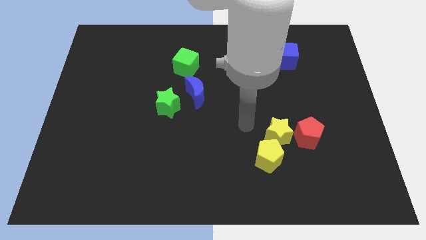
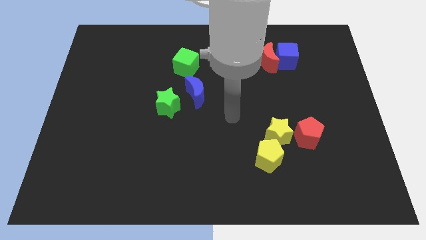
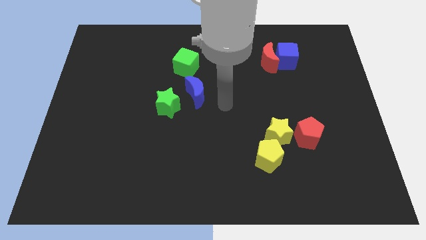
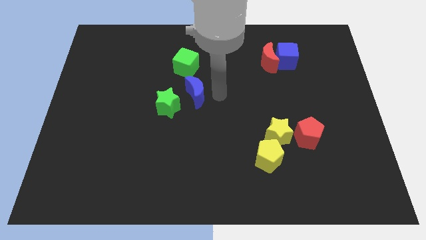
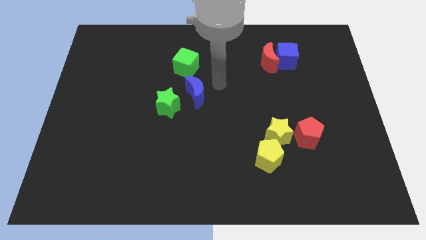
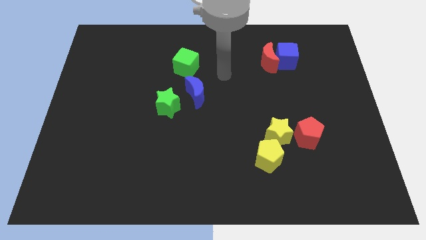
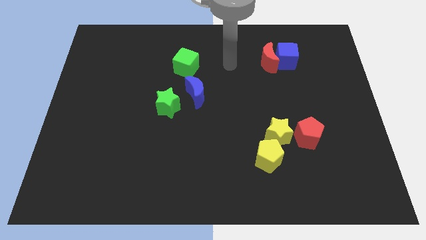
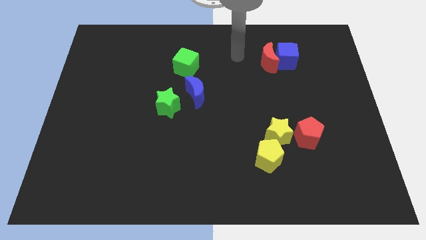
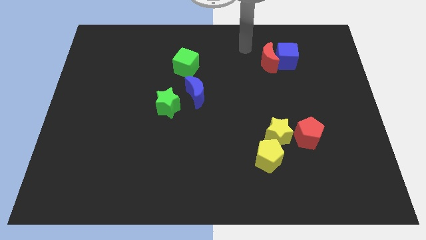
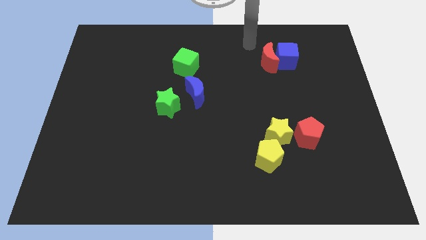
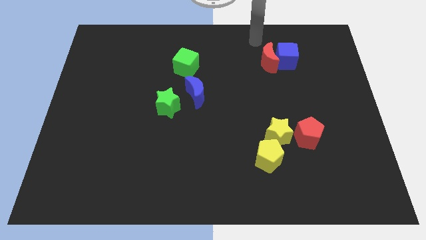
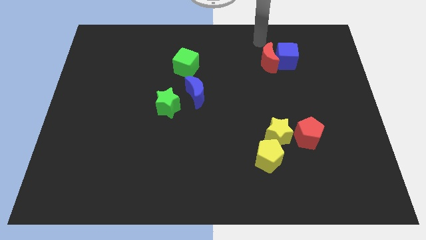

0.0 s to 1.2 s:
move your arm at the top left side of the red moon

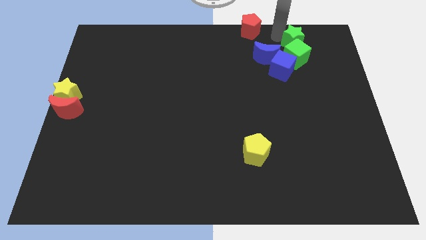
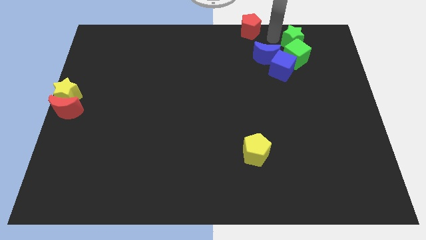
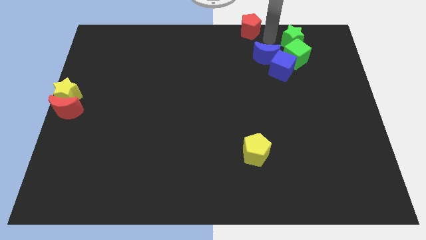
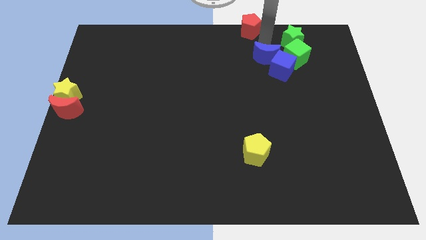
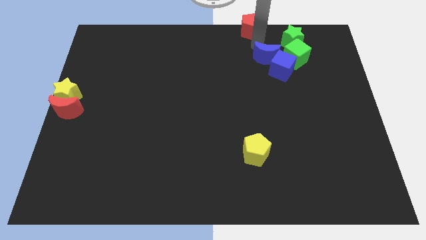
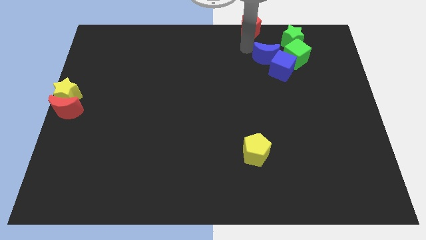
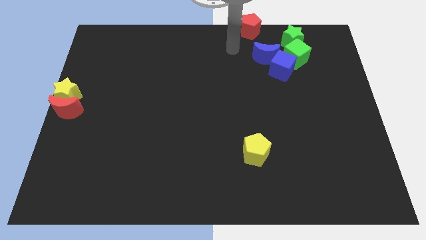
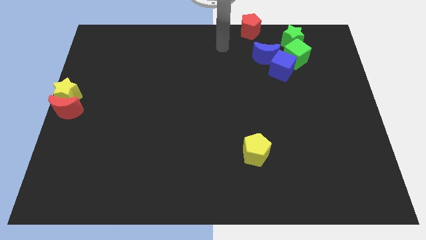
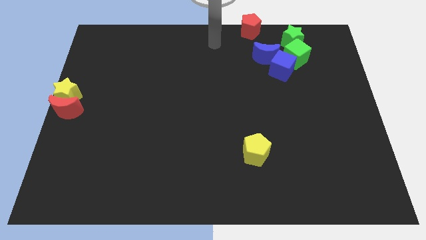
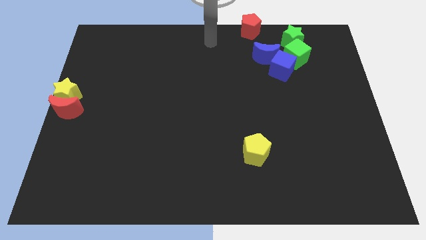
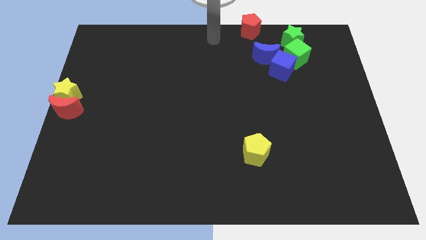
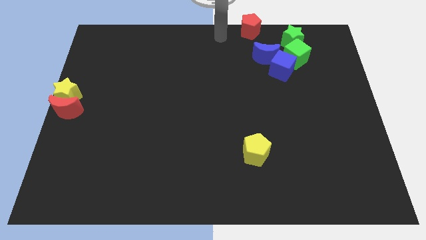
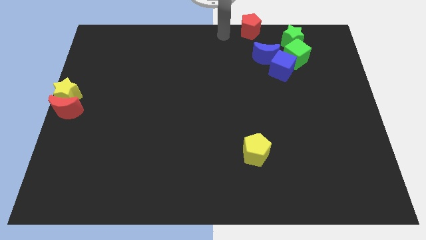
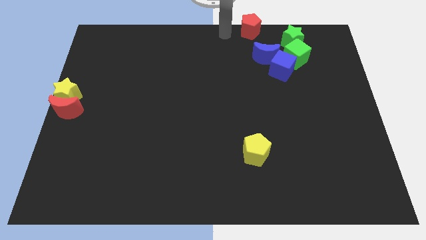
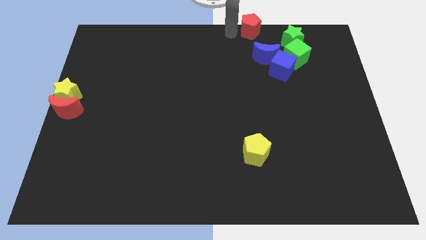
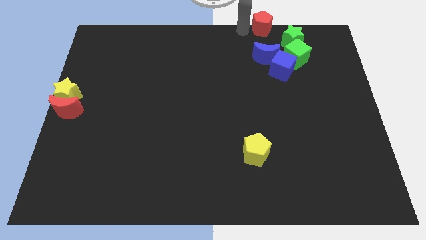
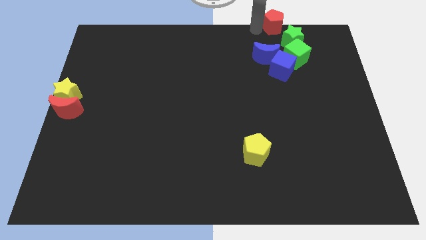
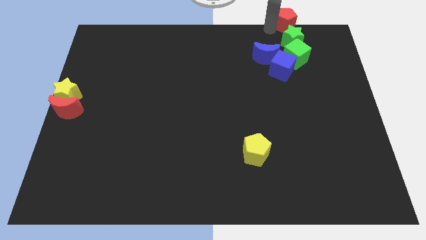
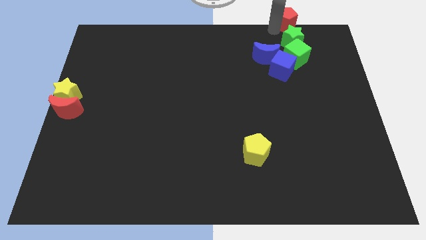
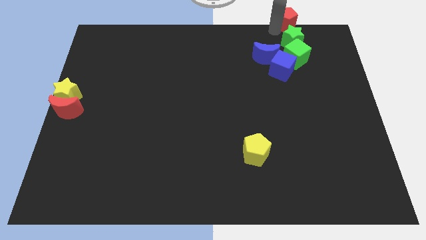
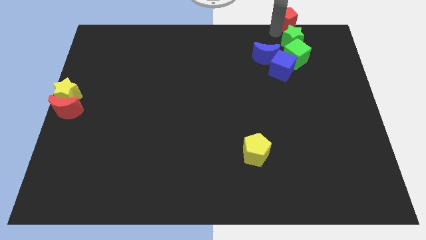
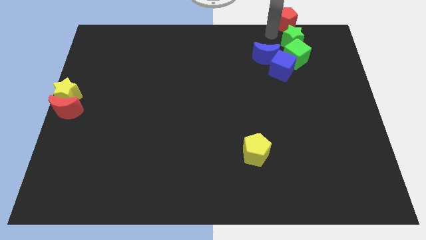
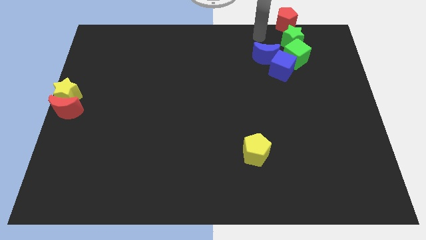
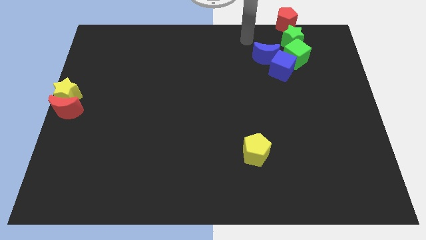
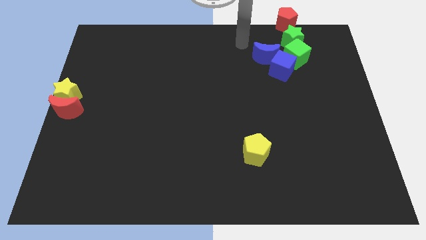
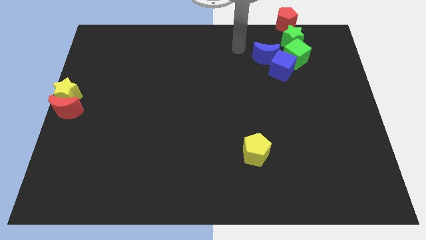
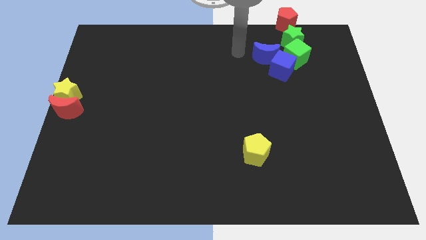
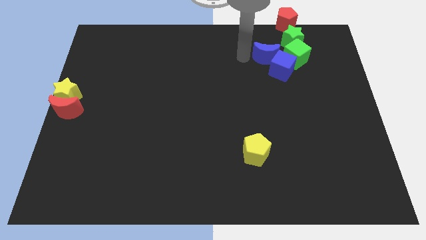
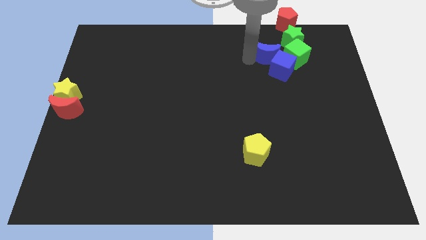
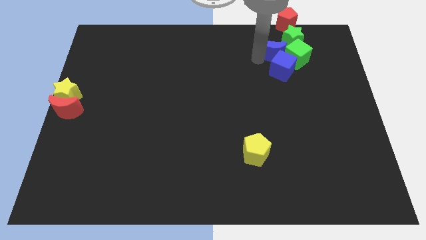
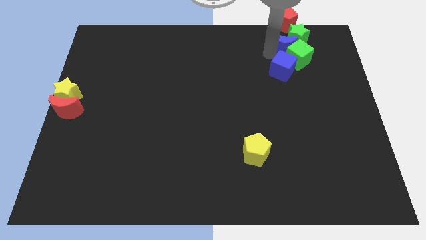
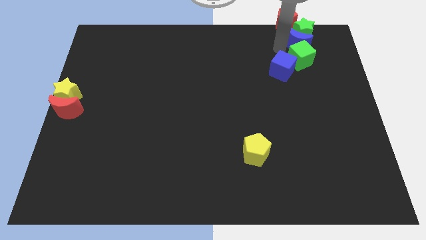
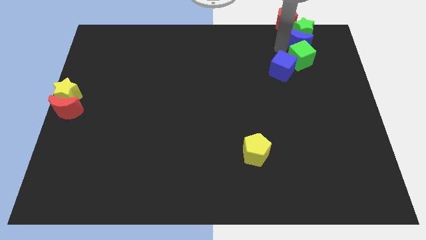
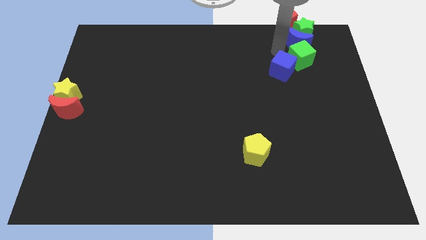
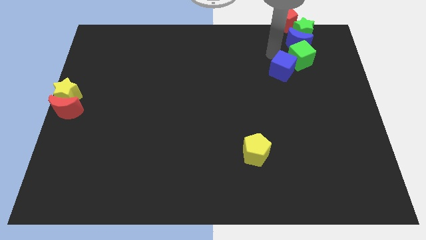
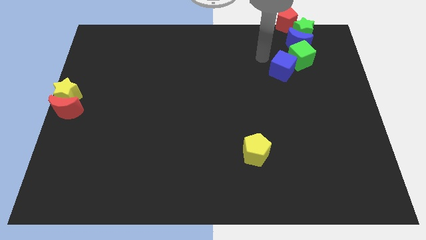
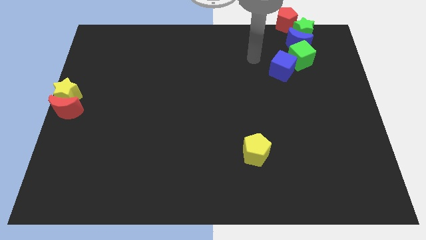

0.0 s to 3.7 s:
place the red pentagon on top of the green star to form a vertical line

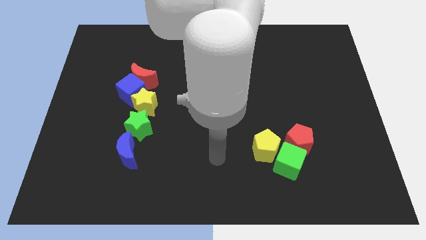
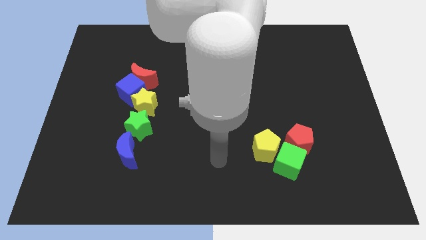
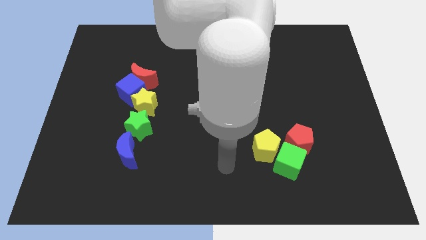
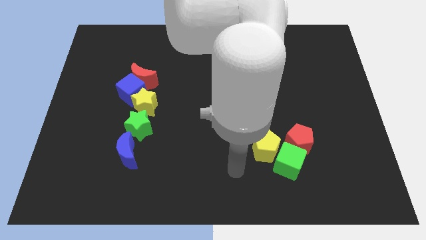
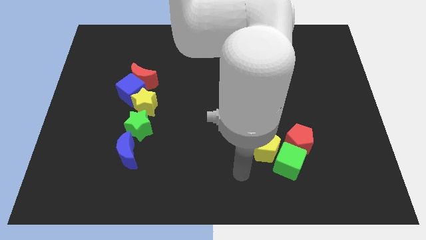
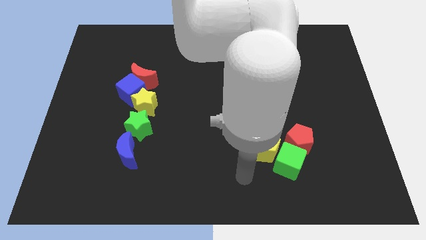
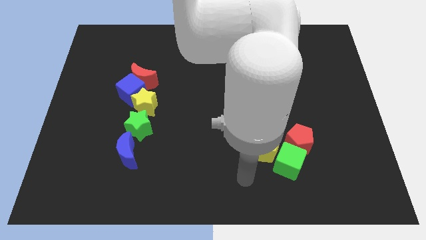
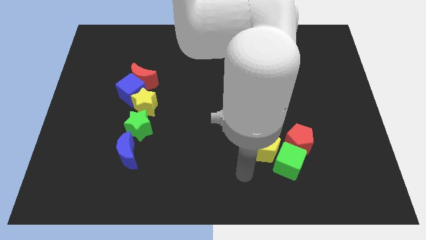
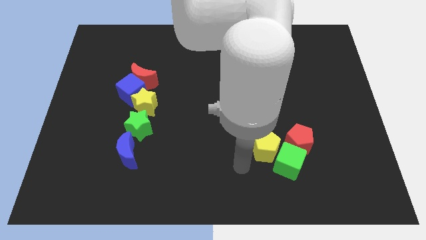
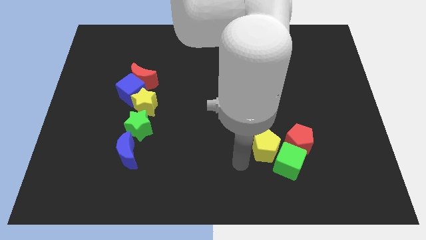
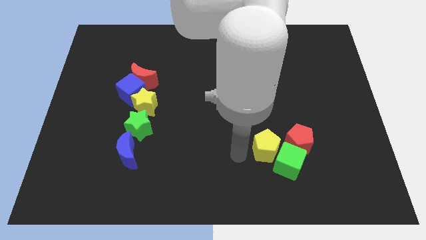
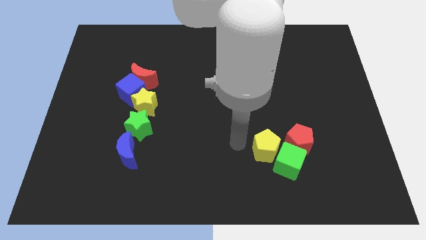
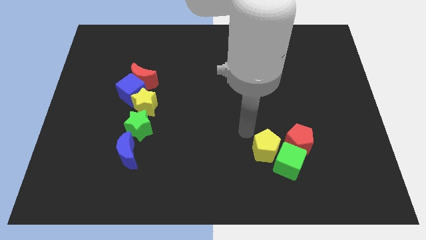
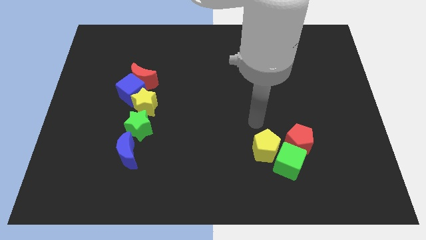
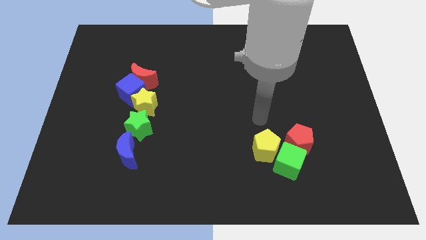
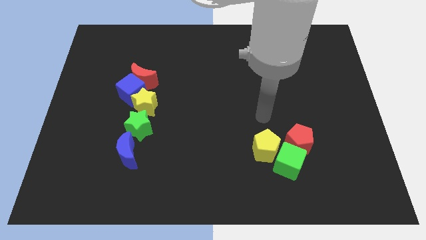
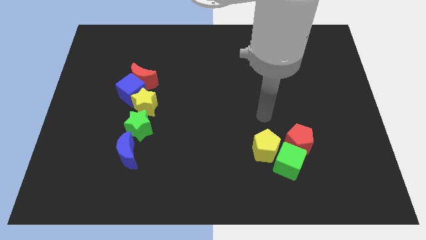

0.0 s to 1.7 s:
palce your arm above the yellow pentagon

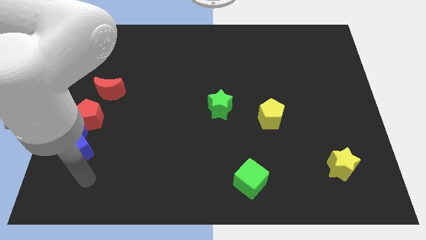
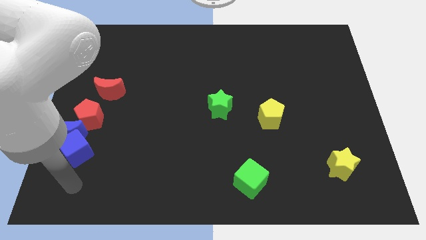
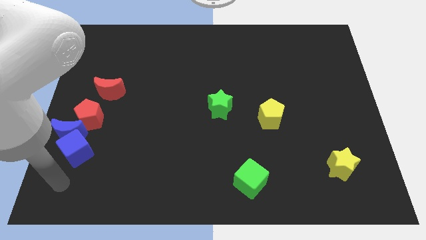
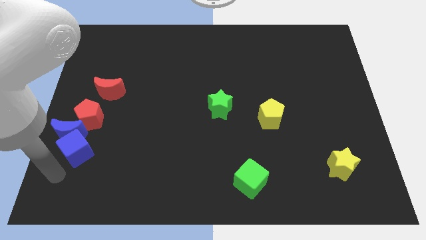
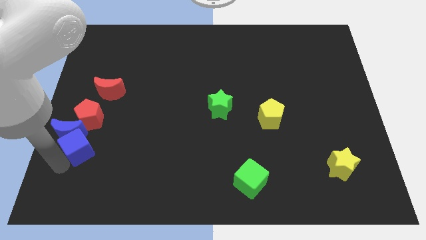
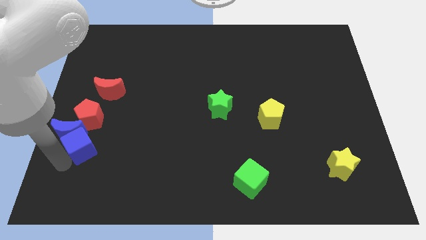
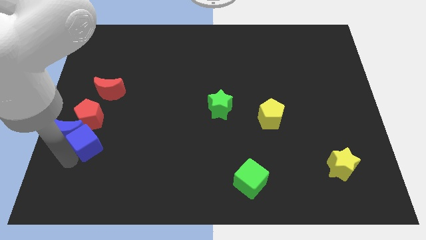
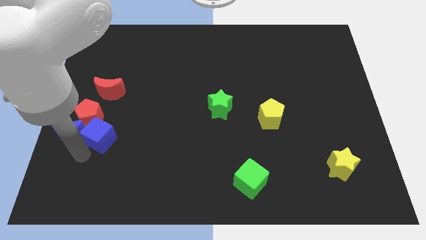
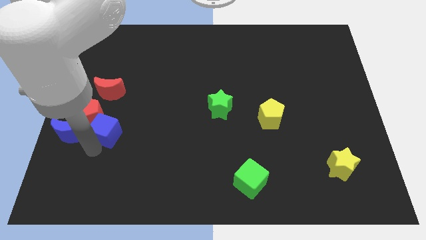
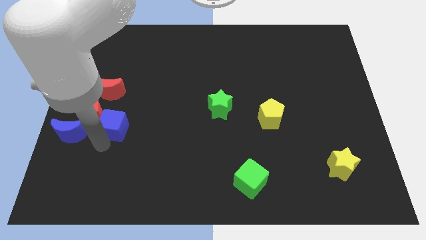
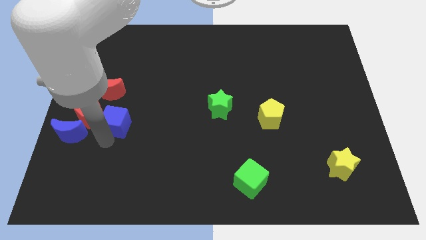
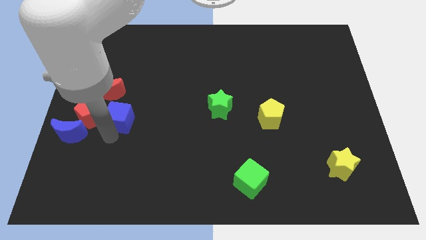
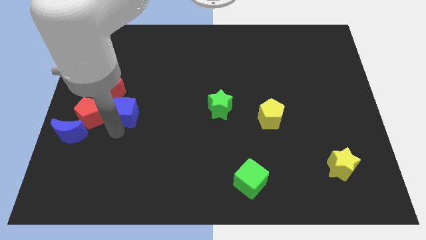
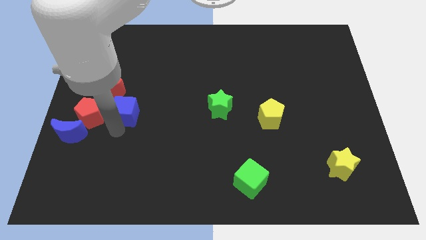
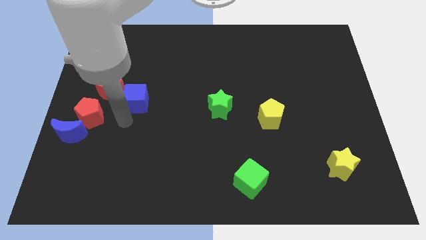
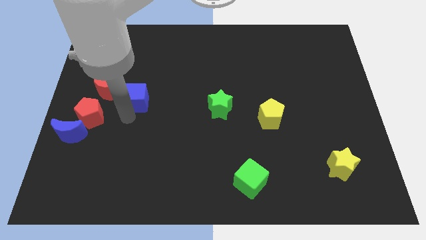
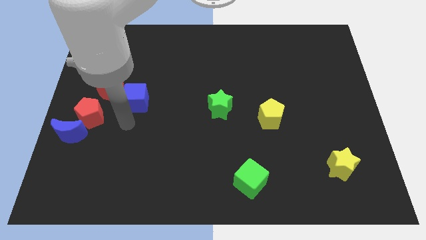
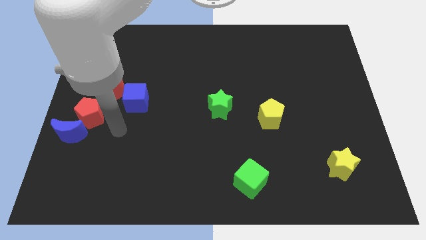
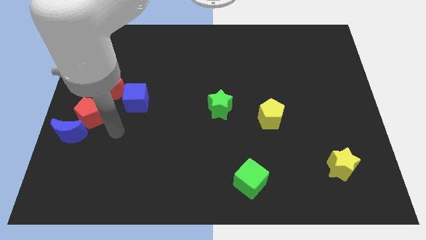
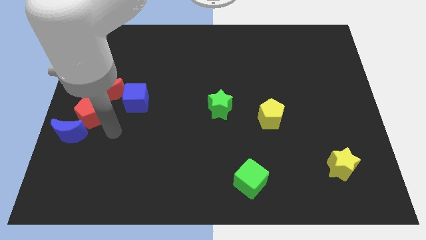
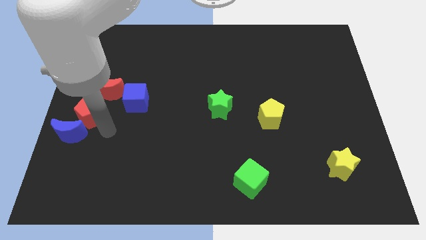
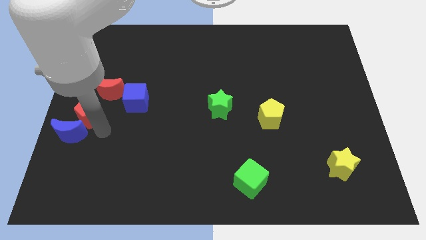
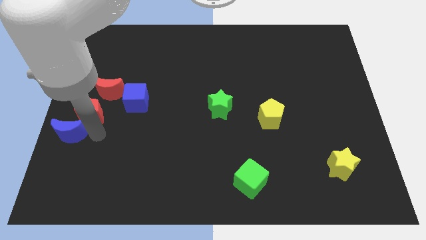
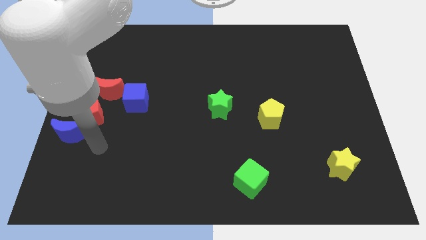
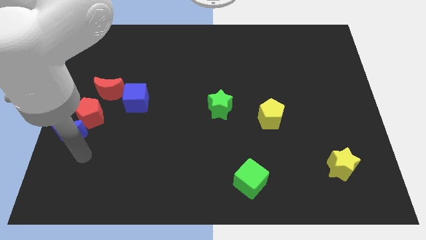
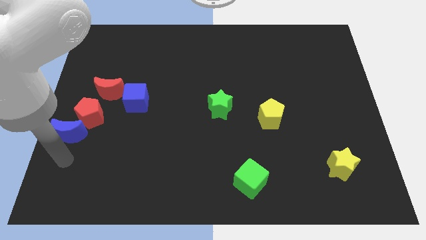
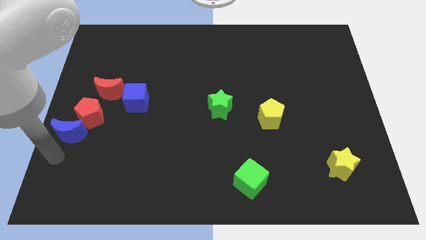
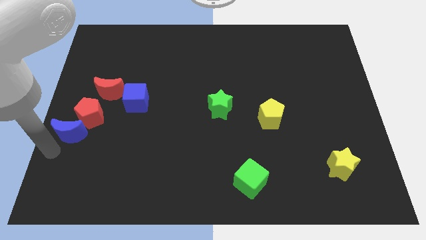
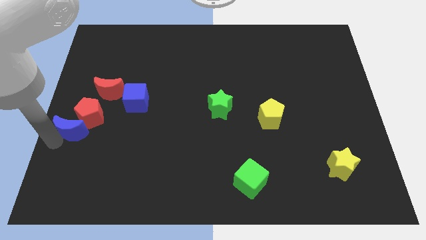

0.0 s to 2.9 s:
move the blue cube to the right of the red moon
